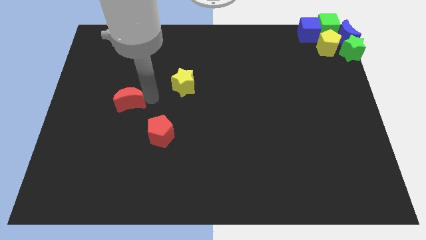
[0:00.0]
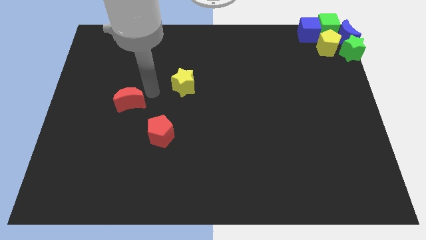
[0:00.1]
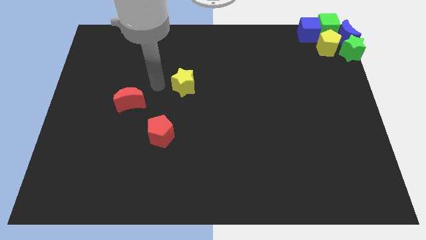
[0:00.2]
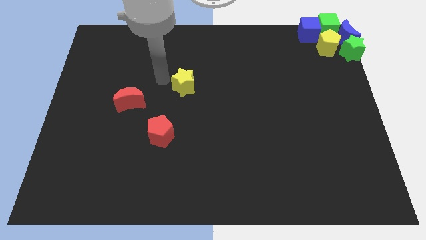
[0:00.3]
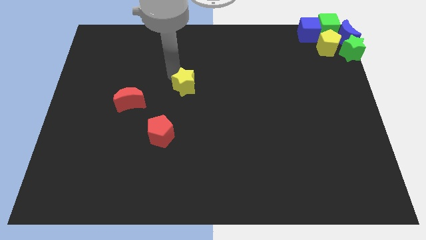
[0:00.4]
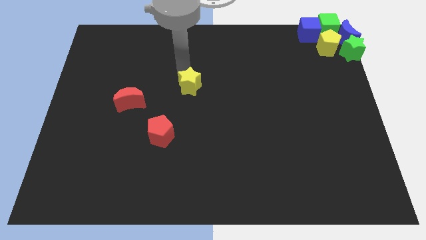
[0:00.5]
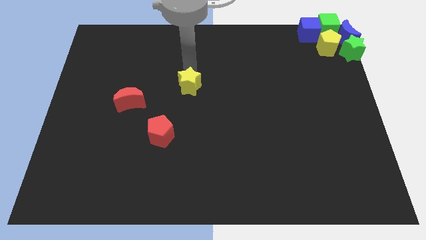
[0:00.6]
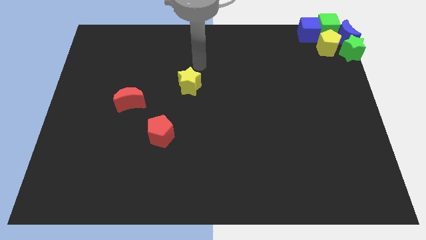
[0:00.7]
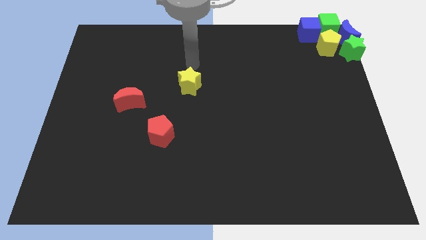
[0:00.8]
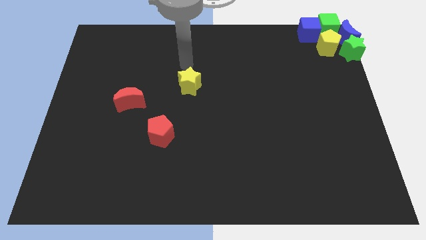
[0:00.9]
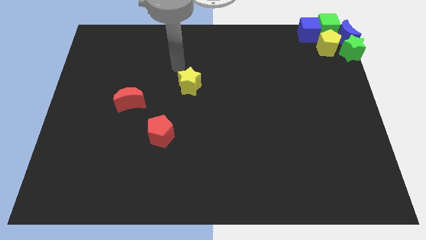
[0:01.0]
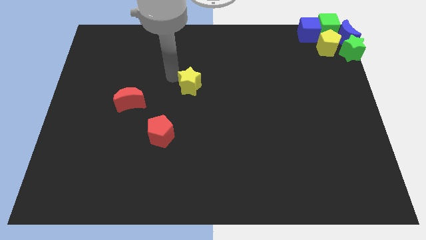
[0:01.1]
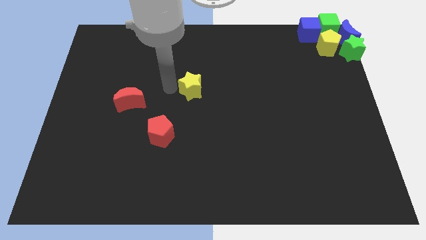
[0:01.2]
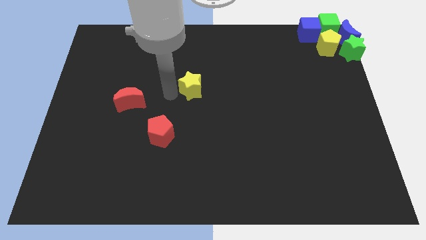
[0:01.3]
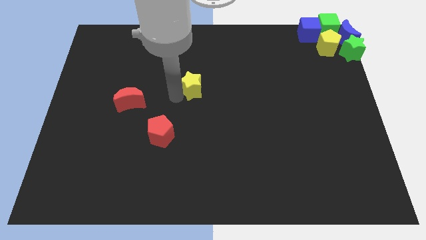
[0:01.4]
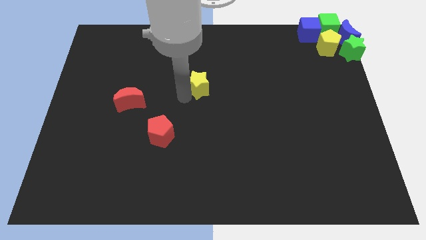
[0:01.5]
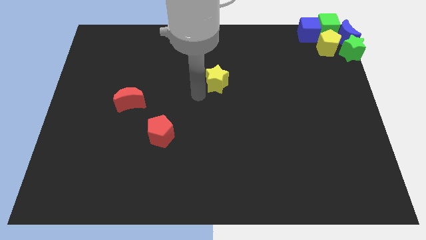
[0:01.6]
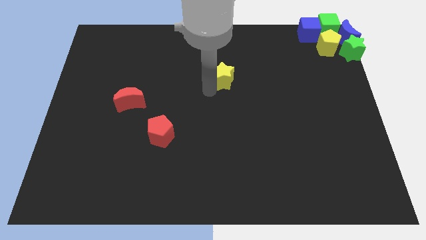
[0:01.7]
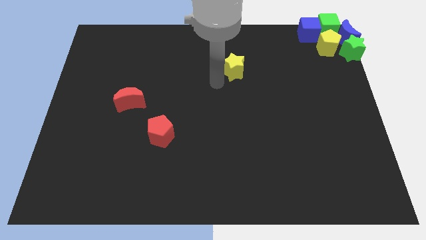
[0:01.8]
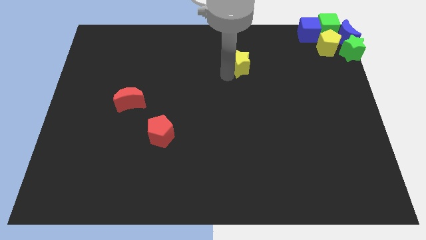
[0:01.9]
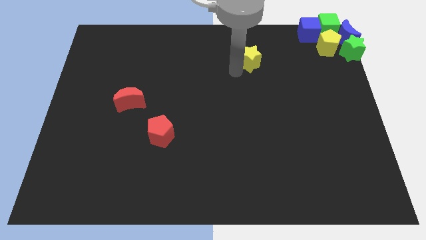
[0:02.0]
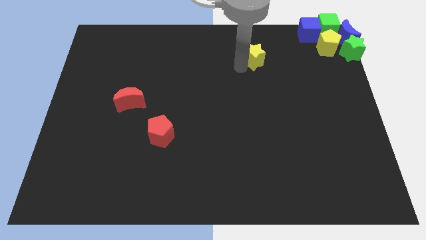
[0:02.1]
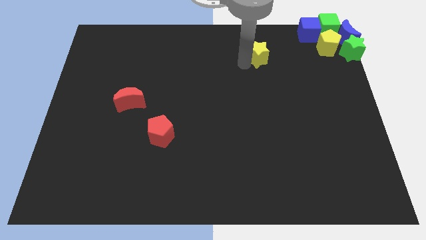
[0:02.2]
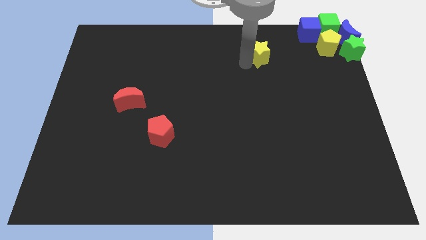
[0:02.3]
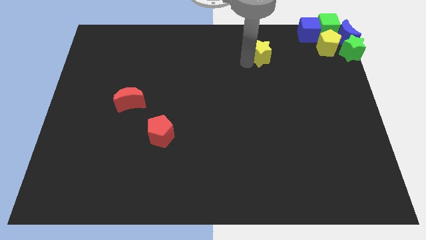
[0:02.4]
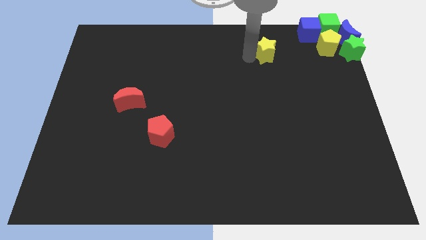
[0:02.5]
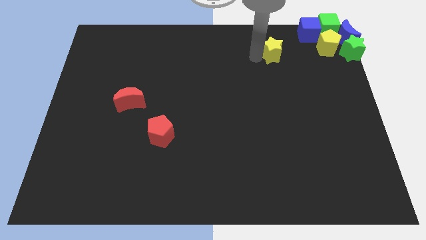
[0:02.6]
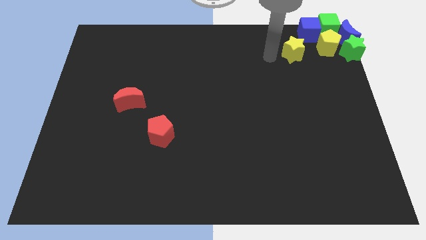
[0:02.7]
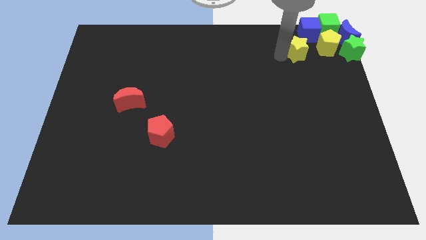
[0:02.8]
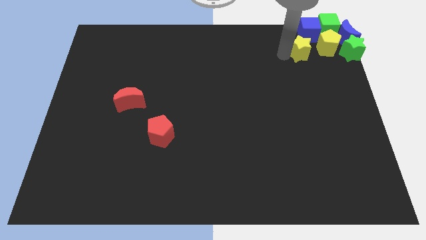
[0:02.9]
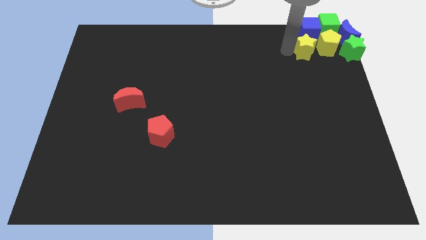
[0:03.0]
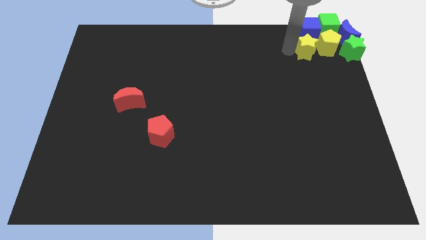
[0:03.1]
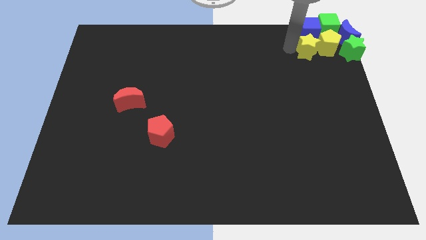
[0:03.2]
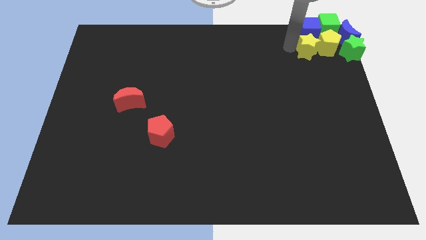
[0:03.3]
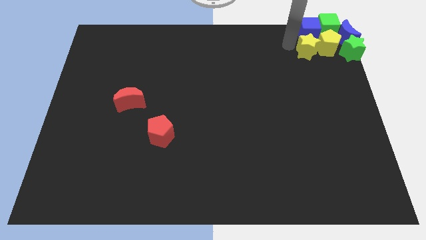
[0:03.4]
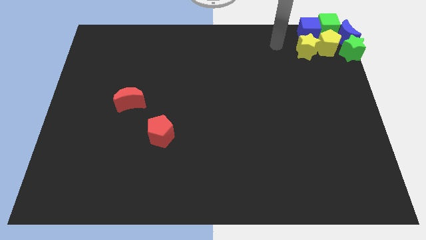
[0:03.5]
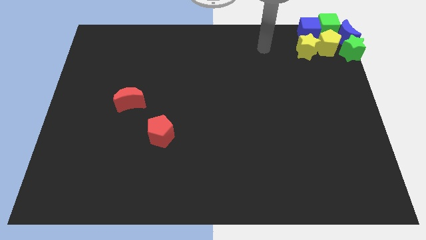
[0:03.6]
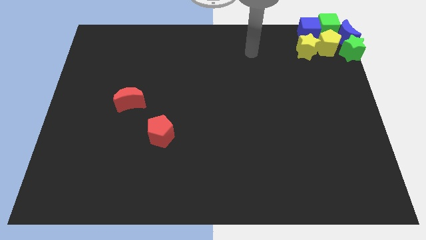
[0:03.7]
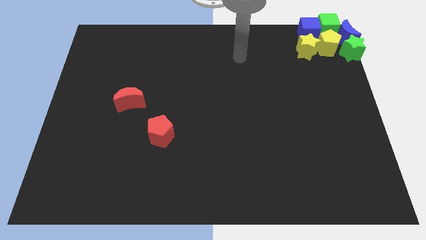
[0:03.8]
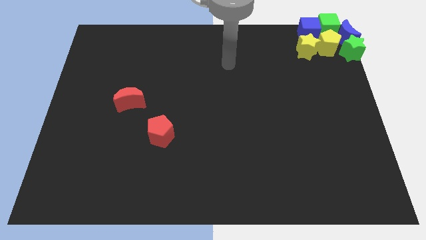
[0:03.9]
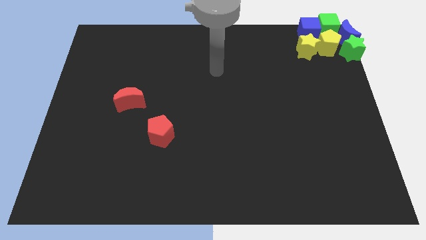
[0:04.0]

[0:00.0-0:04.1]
add the yellow star to the group of blocks

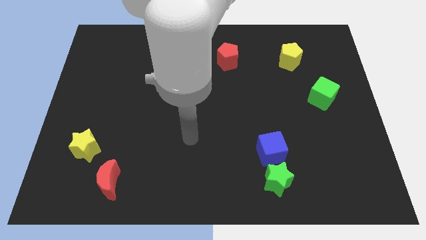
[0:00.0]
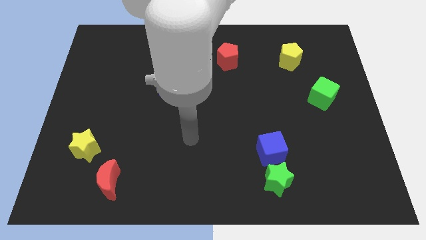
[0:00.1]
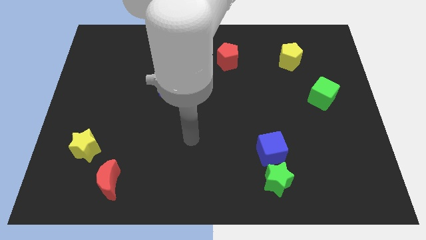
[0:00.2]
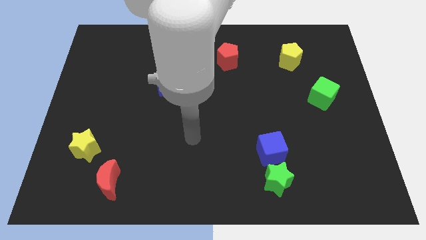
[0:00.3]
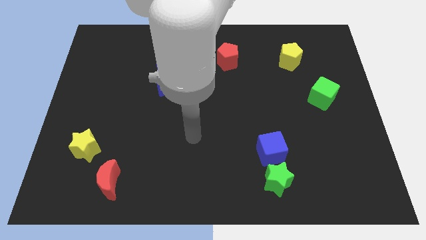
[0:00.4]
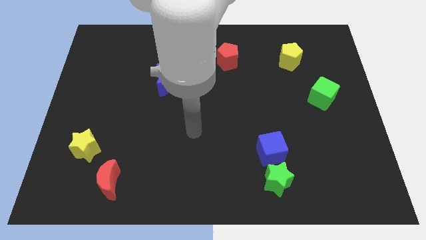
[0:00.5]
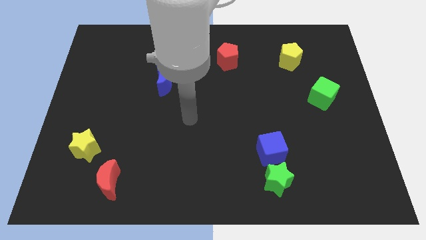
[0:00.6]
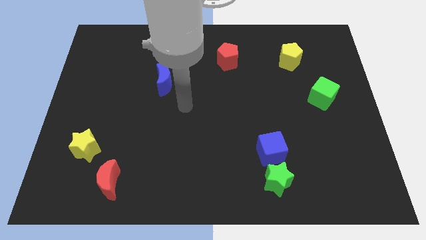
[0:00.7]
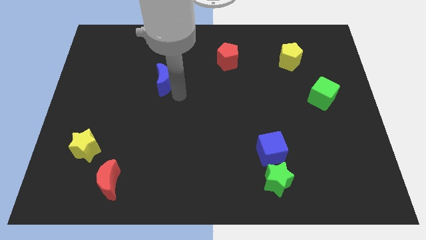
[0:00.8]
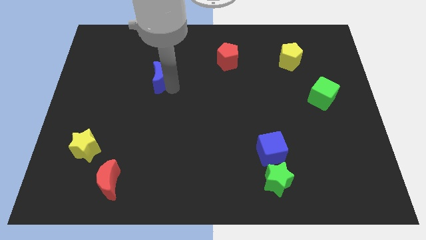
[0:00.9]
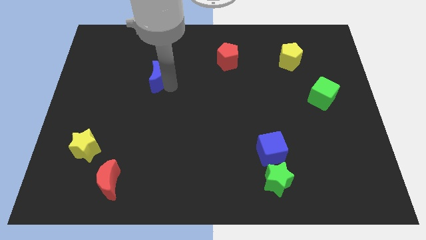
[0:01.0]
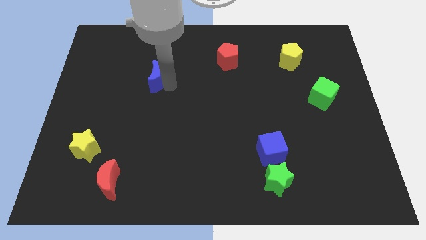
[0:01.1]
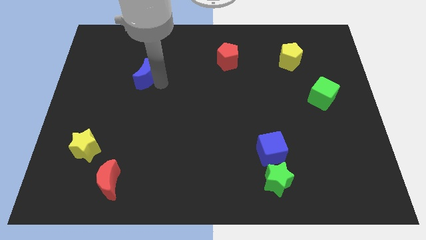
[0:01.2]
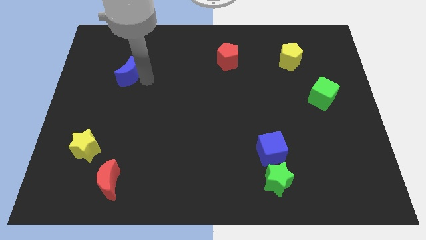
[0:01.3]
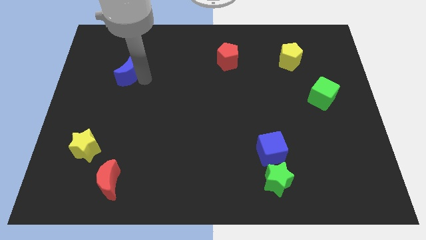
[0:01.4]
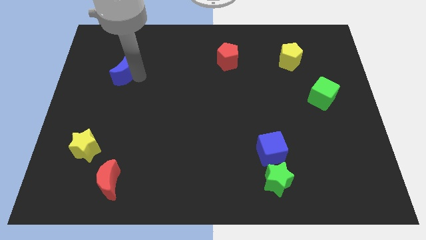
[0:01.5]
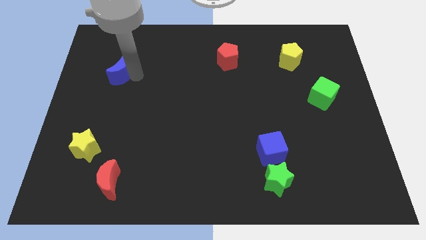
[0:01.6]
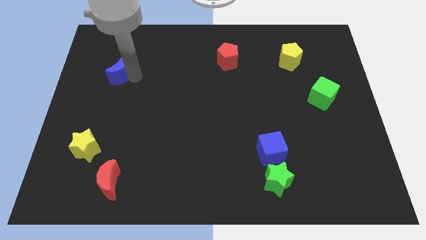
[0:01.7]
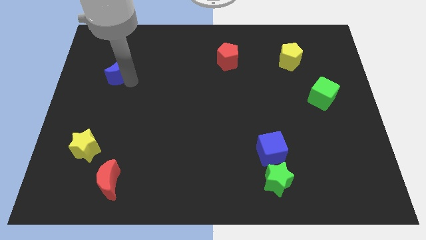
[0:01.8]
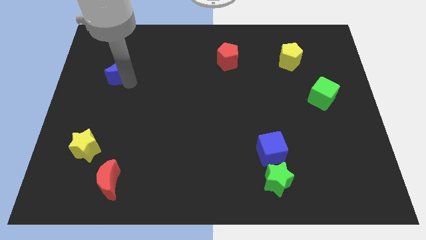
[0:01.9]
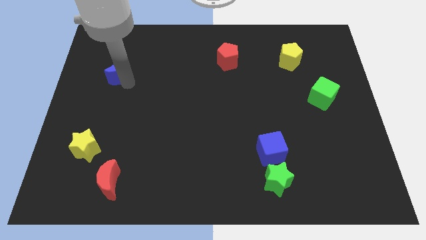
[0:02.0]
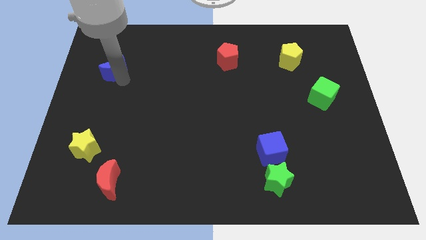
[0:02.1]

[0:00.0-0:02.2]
move your arm close to the blue moon

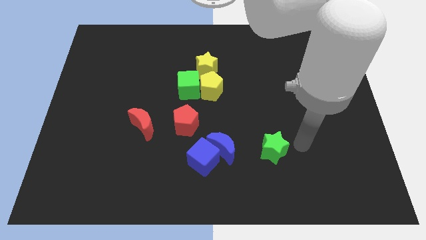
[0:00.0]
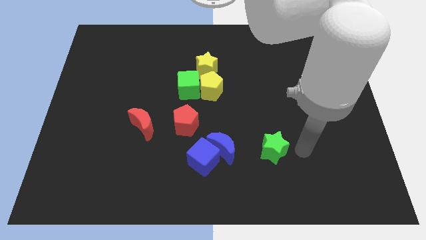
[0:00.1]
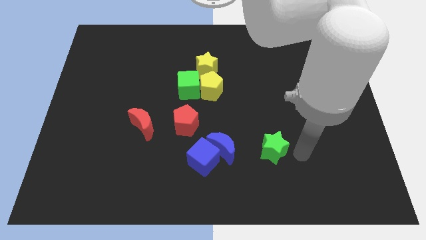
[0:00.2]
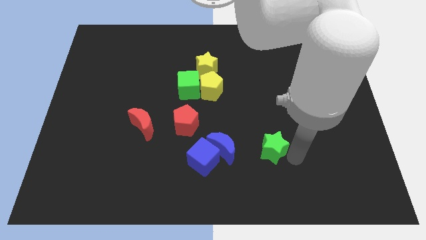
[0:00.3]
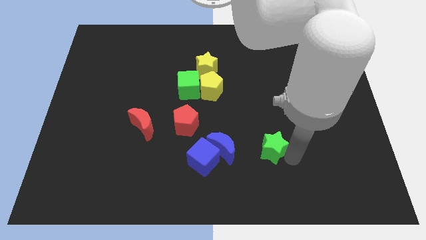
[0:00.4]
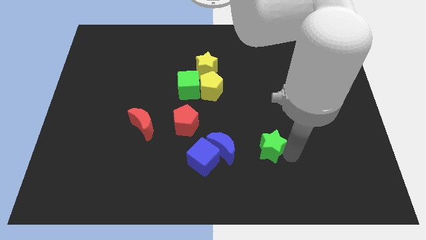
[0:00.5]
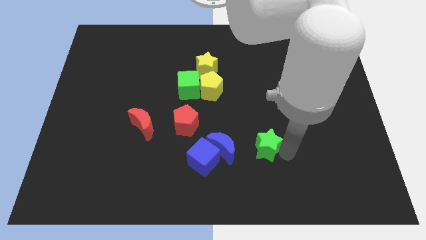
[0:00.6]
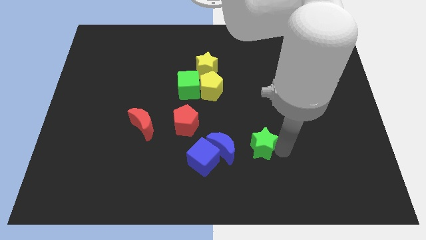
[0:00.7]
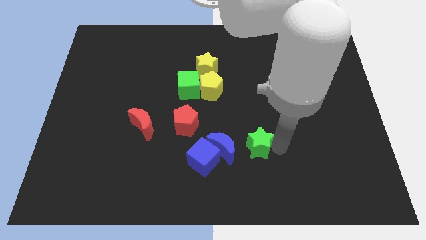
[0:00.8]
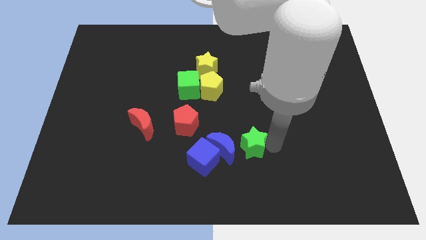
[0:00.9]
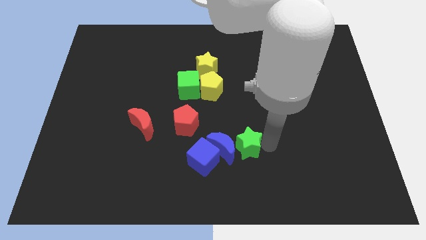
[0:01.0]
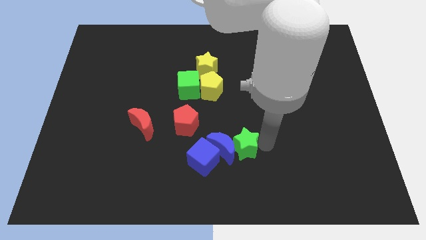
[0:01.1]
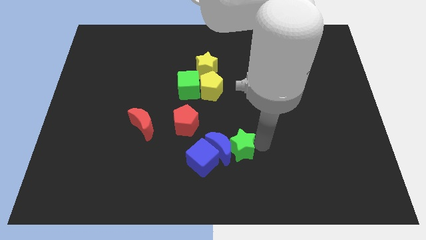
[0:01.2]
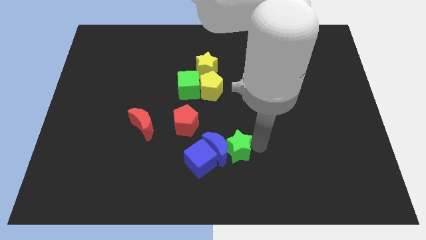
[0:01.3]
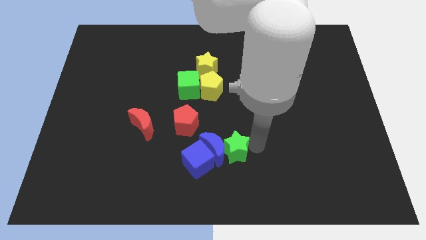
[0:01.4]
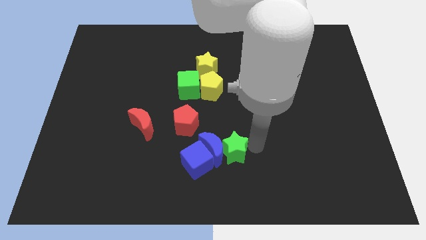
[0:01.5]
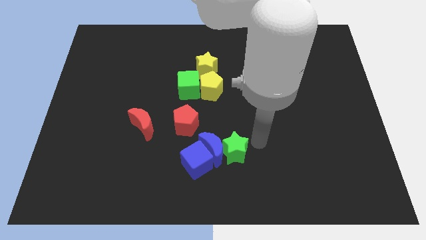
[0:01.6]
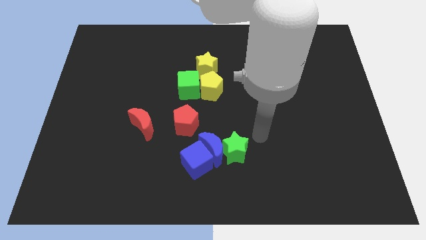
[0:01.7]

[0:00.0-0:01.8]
push the blue cube blue crescent with the green star at the bottom center of the board

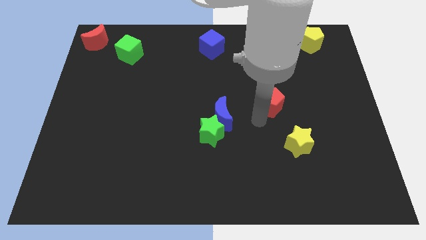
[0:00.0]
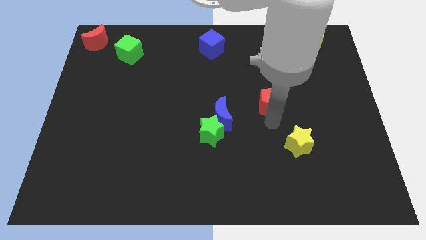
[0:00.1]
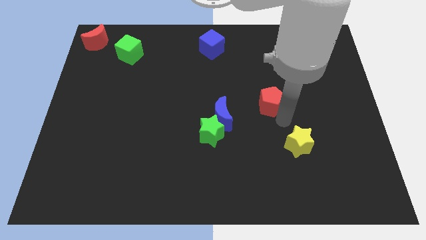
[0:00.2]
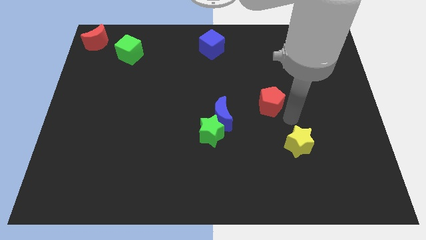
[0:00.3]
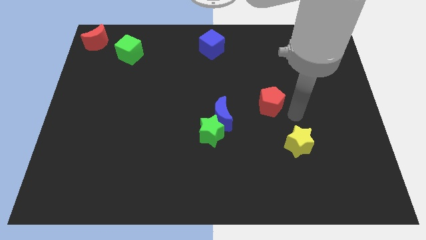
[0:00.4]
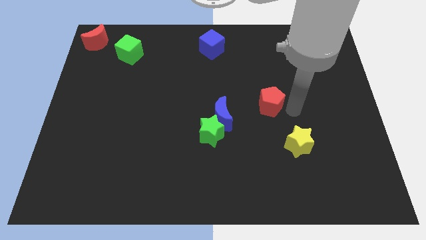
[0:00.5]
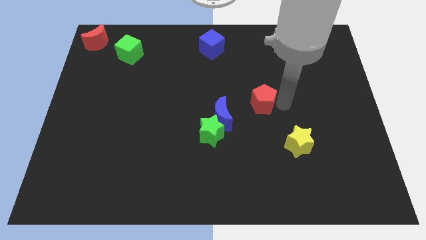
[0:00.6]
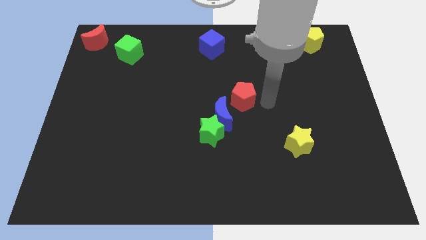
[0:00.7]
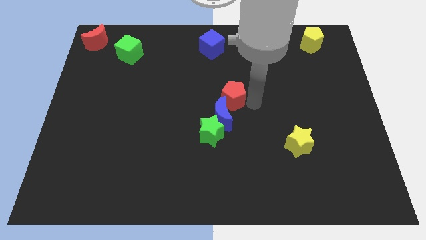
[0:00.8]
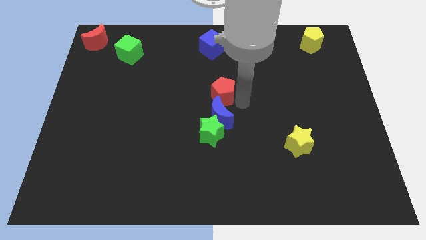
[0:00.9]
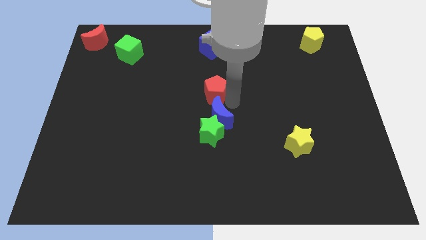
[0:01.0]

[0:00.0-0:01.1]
push the red pentagon to the top of the blue crescent
